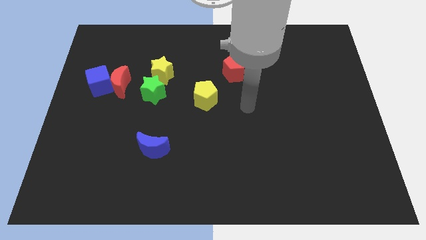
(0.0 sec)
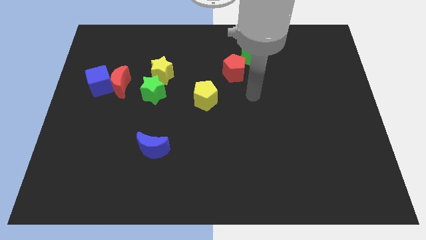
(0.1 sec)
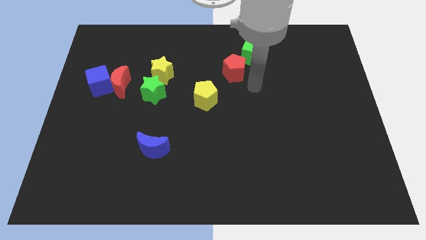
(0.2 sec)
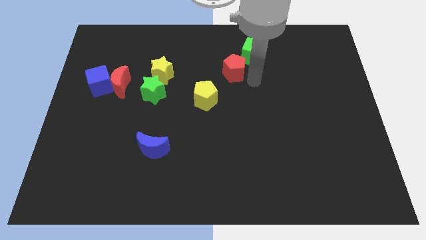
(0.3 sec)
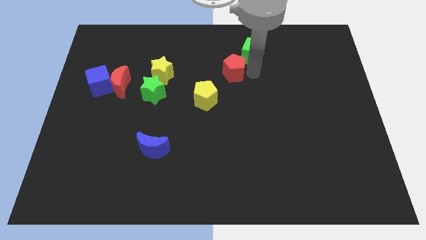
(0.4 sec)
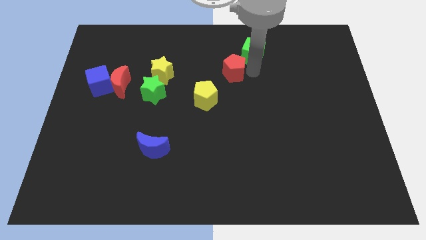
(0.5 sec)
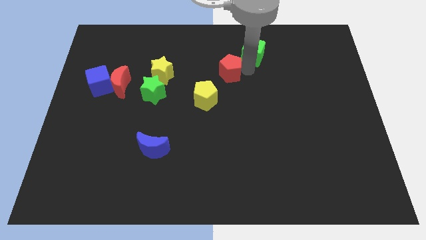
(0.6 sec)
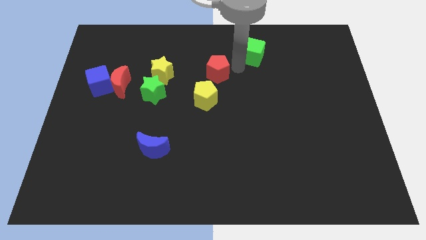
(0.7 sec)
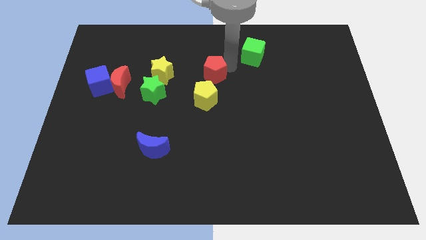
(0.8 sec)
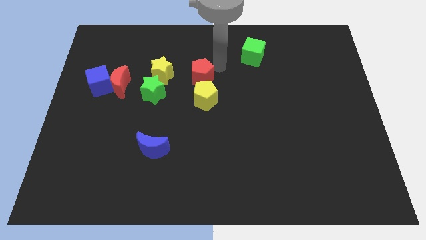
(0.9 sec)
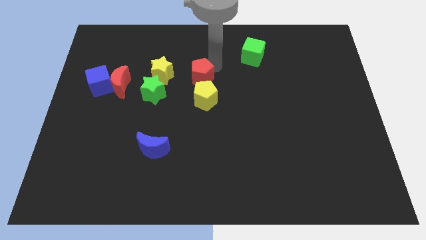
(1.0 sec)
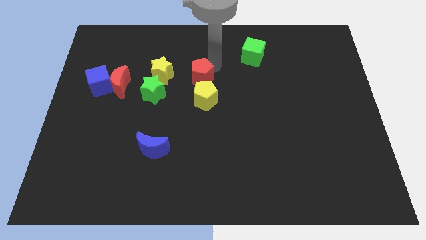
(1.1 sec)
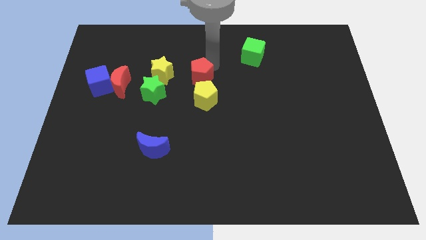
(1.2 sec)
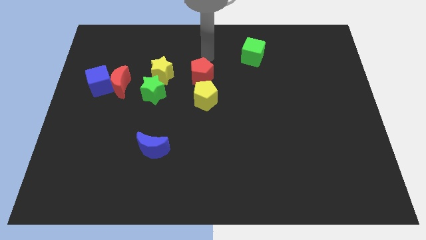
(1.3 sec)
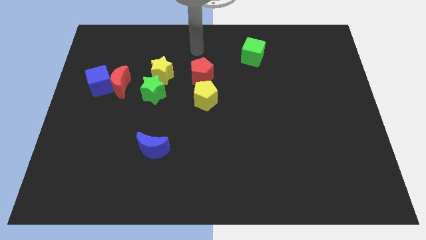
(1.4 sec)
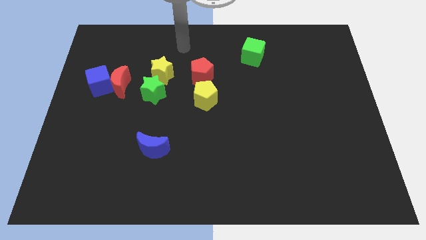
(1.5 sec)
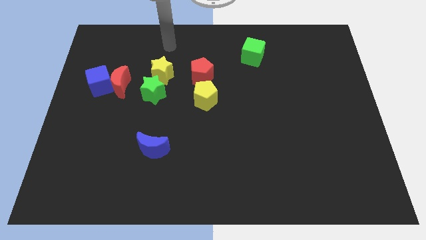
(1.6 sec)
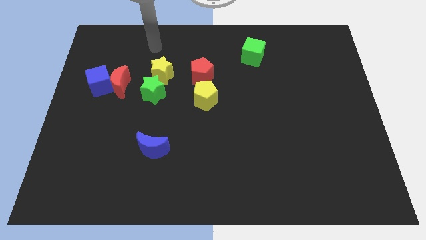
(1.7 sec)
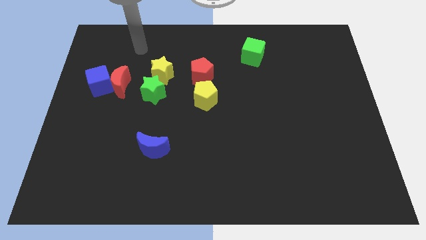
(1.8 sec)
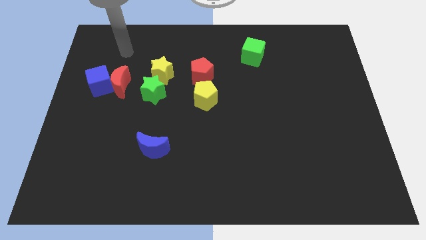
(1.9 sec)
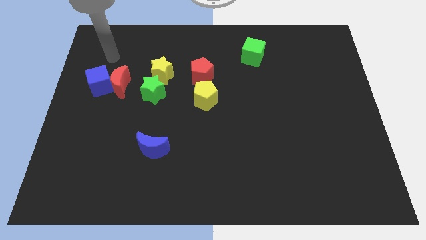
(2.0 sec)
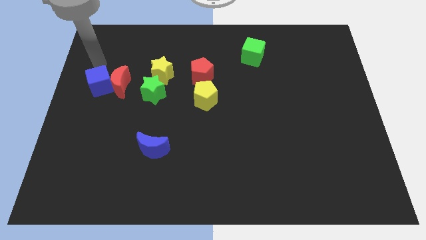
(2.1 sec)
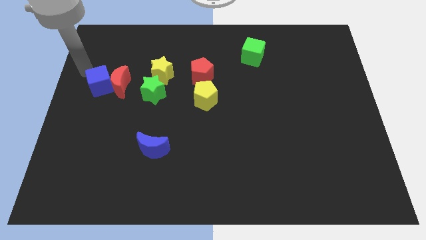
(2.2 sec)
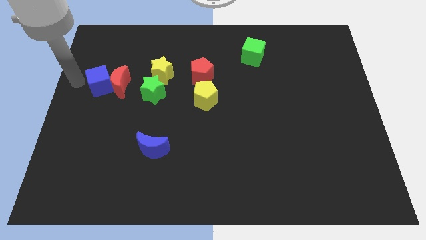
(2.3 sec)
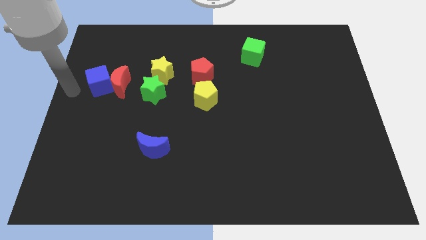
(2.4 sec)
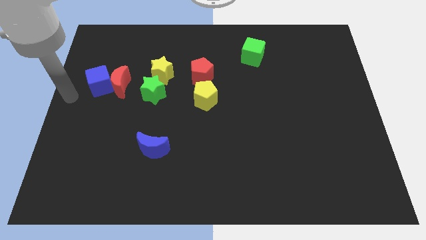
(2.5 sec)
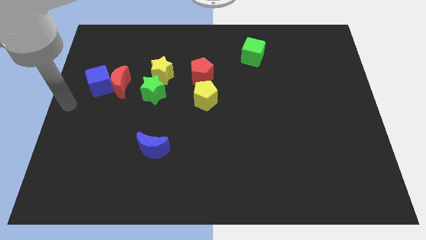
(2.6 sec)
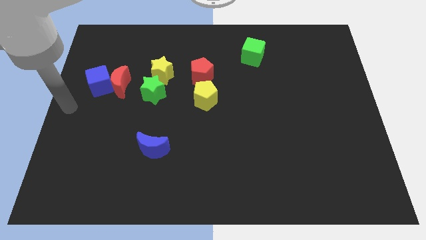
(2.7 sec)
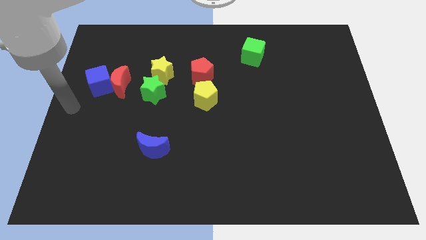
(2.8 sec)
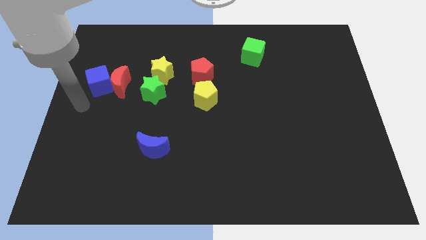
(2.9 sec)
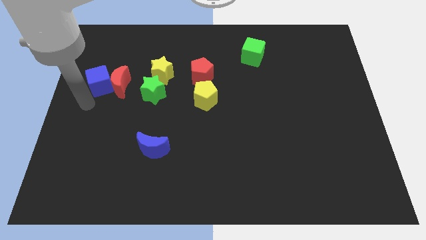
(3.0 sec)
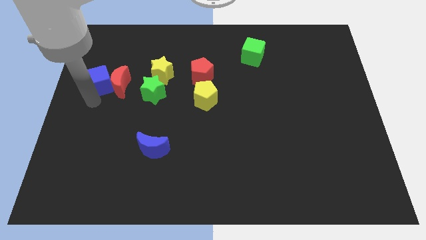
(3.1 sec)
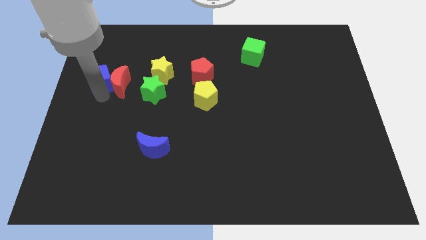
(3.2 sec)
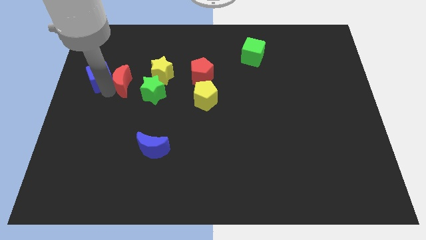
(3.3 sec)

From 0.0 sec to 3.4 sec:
place the arm down to the blue cube

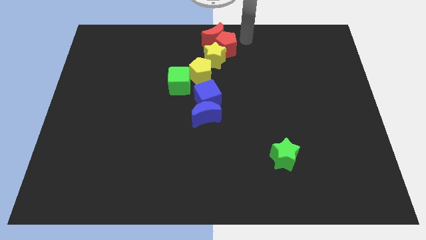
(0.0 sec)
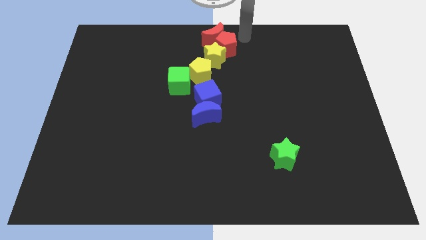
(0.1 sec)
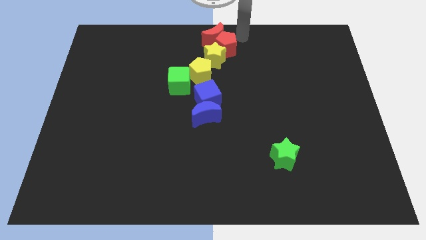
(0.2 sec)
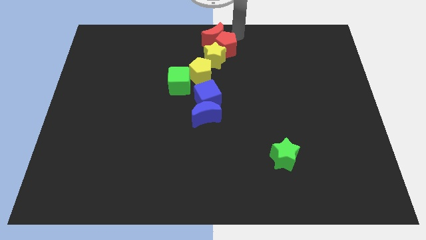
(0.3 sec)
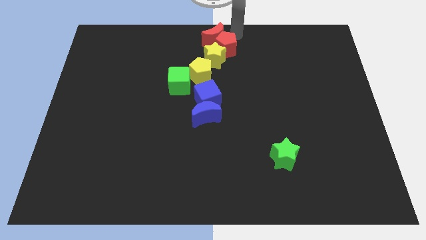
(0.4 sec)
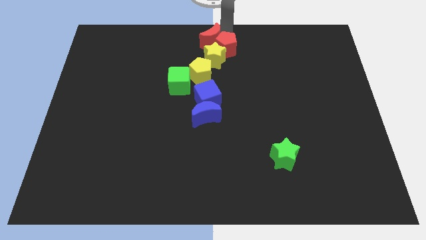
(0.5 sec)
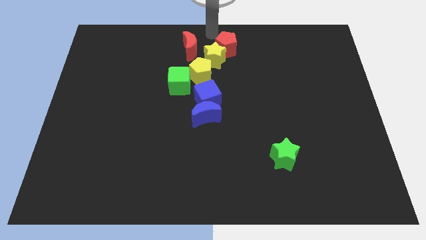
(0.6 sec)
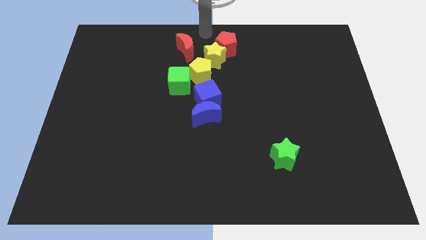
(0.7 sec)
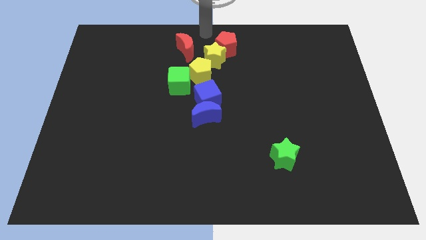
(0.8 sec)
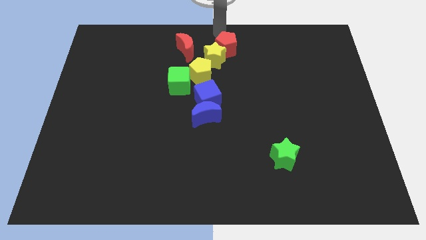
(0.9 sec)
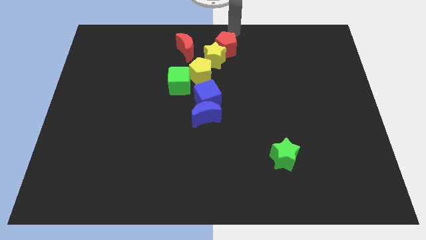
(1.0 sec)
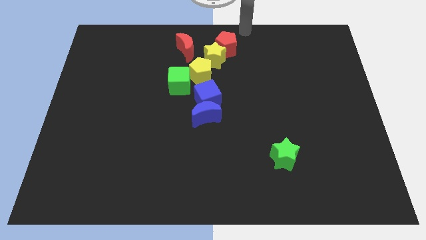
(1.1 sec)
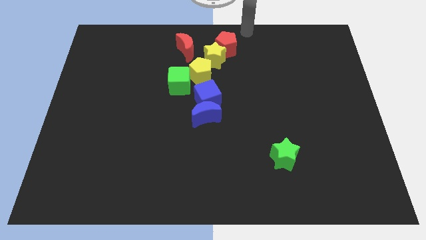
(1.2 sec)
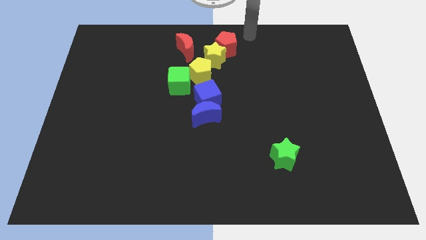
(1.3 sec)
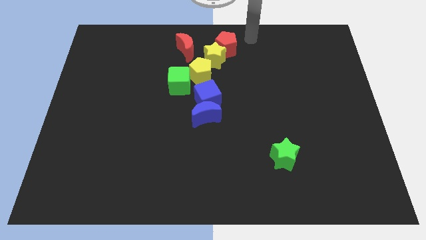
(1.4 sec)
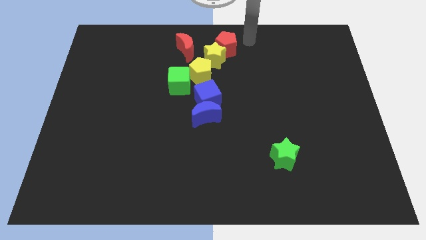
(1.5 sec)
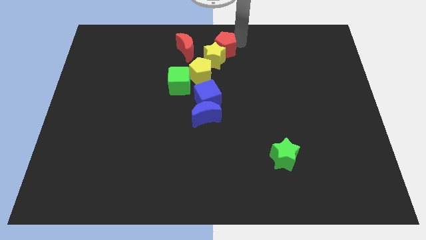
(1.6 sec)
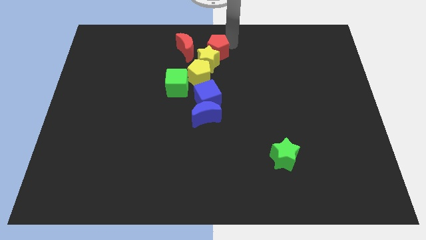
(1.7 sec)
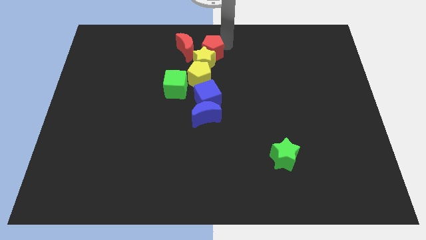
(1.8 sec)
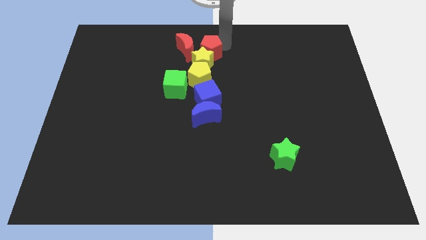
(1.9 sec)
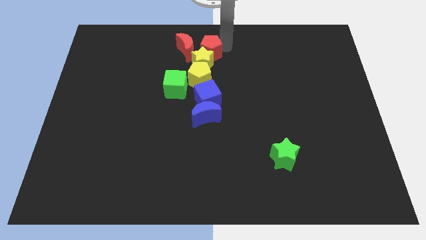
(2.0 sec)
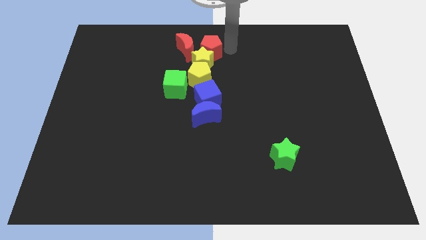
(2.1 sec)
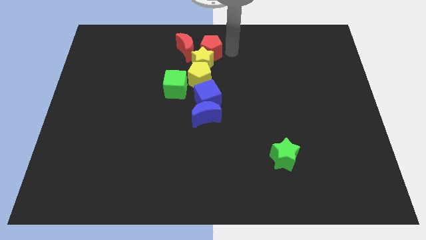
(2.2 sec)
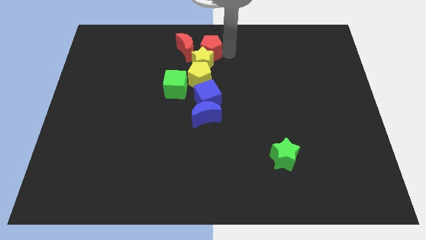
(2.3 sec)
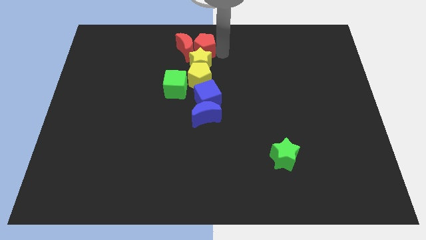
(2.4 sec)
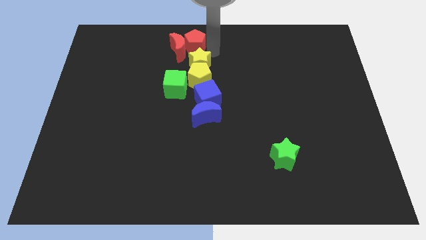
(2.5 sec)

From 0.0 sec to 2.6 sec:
push red pentagon above yellow star

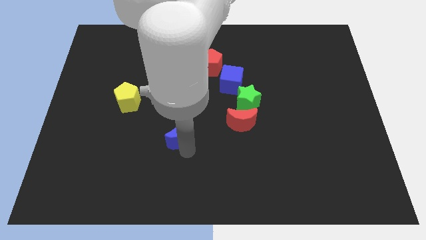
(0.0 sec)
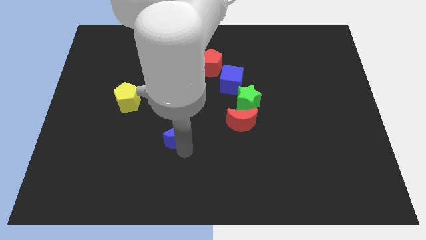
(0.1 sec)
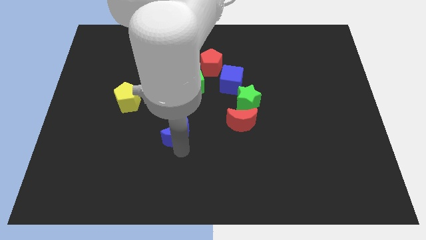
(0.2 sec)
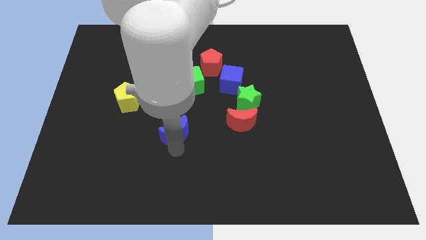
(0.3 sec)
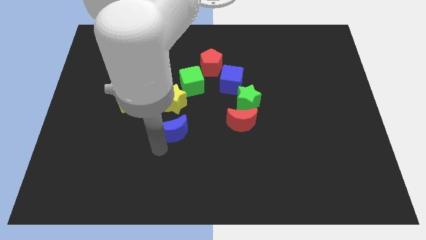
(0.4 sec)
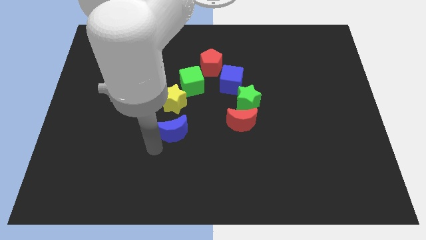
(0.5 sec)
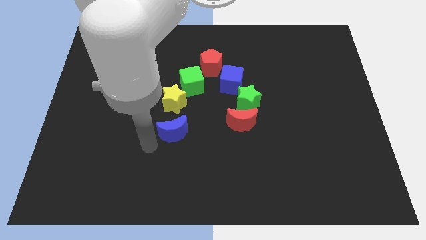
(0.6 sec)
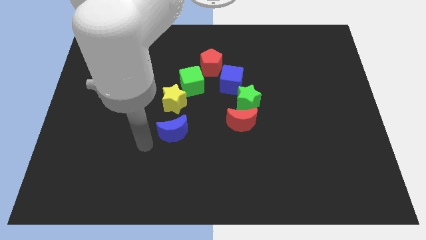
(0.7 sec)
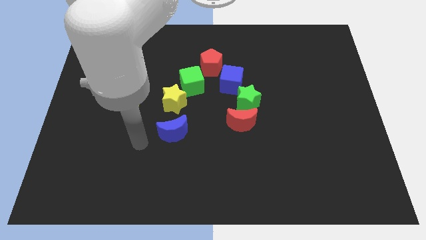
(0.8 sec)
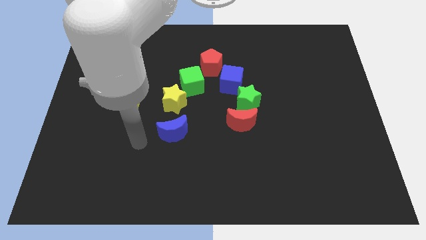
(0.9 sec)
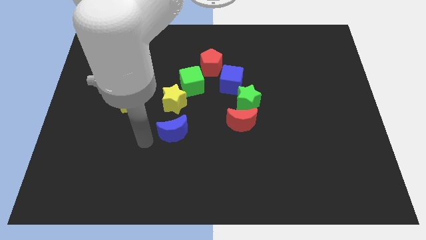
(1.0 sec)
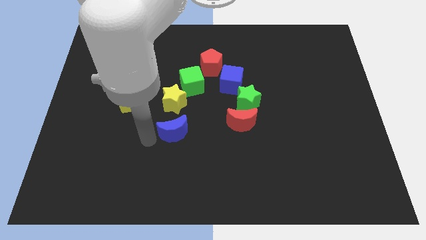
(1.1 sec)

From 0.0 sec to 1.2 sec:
slide the blue crescent slightly towards the yellow star

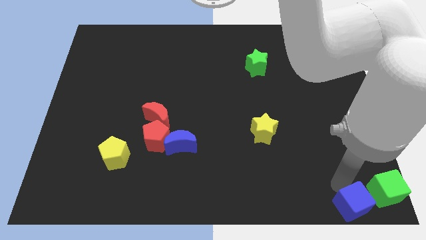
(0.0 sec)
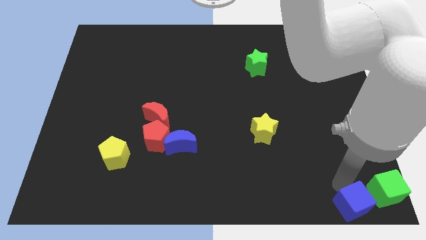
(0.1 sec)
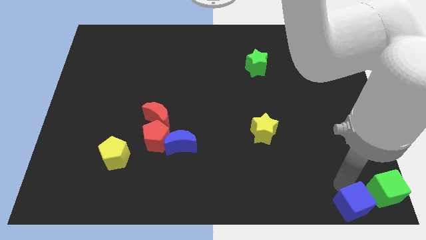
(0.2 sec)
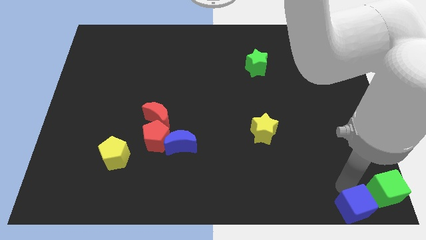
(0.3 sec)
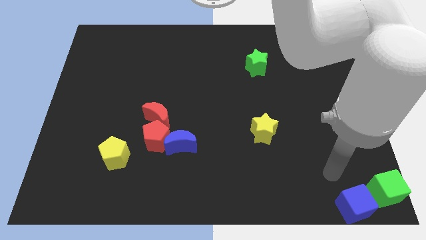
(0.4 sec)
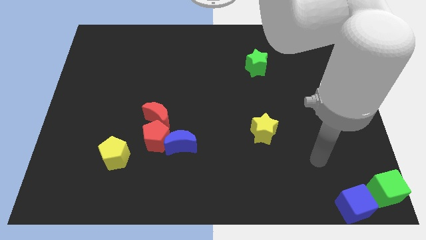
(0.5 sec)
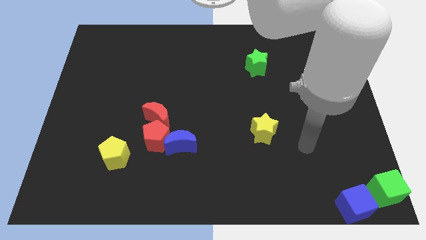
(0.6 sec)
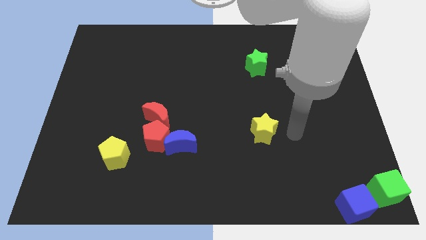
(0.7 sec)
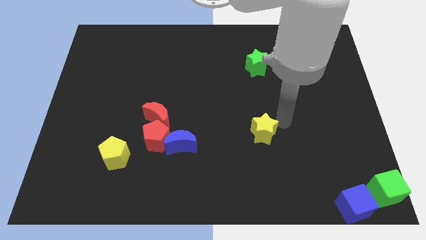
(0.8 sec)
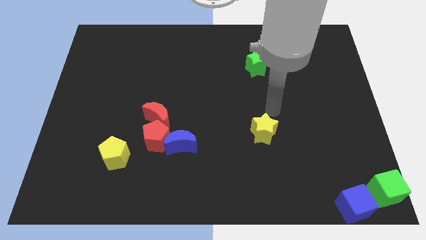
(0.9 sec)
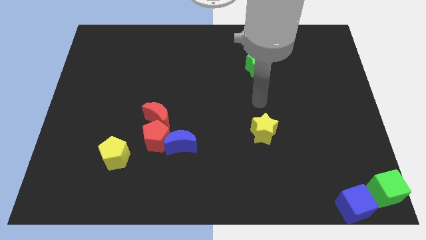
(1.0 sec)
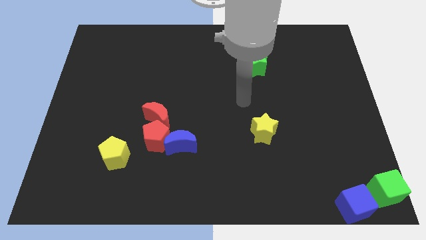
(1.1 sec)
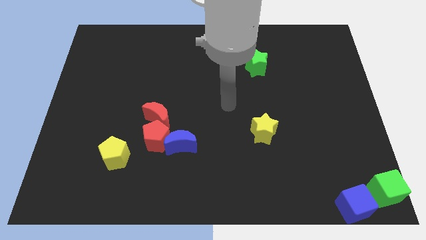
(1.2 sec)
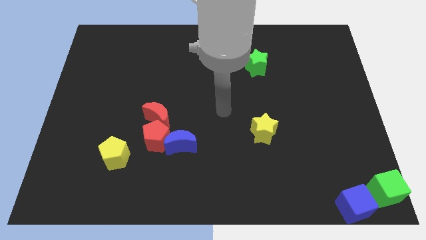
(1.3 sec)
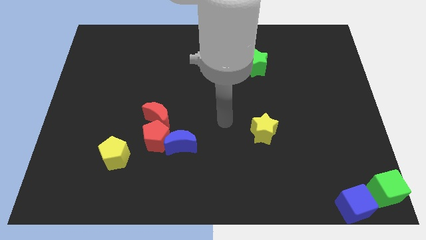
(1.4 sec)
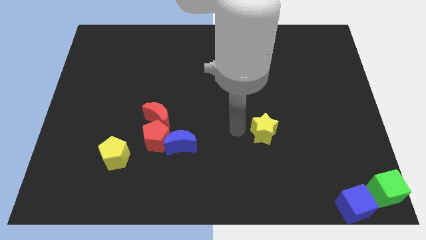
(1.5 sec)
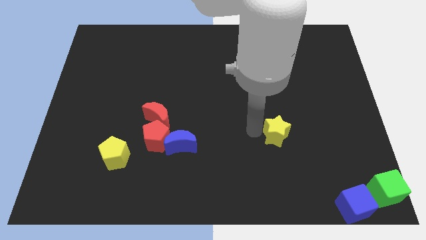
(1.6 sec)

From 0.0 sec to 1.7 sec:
place your arm at the left side of the yellow star
